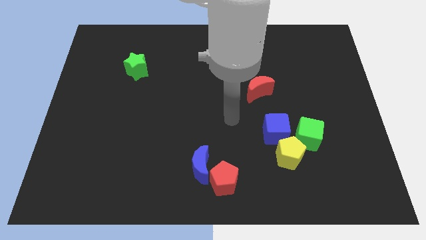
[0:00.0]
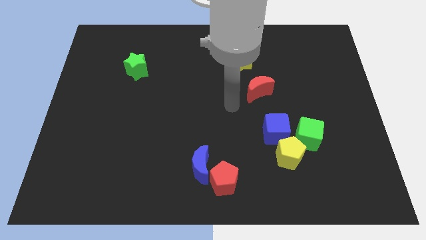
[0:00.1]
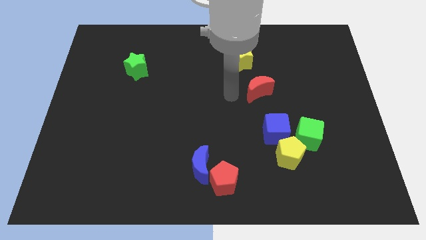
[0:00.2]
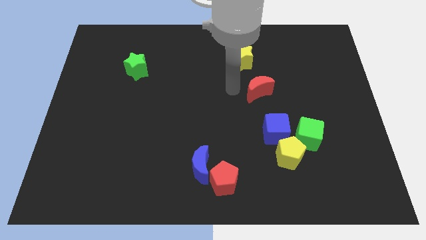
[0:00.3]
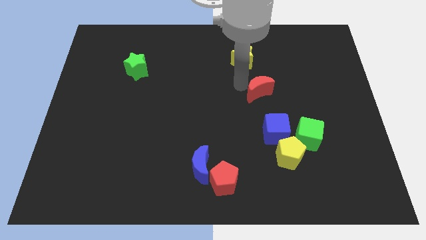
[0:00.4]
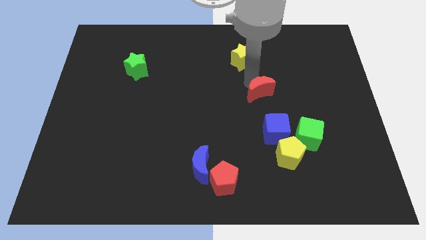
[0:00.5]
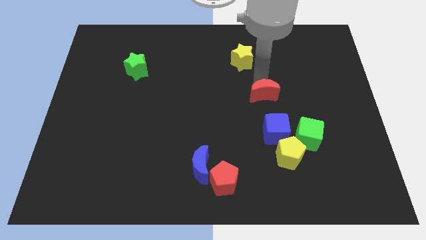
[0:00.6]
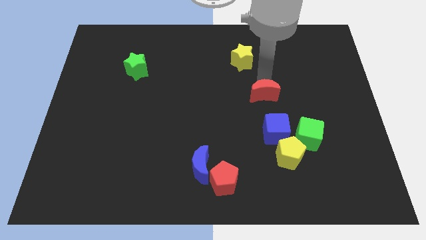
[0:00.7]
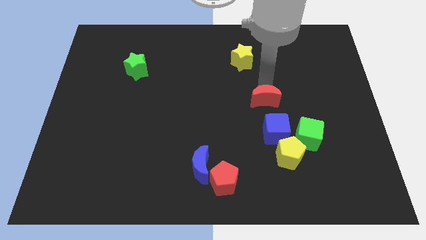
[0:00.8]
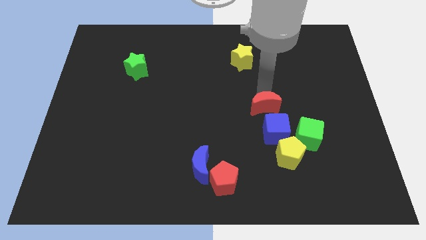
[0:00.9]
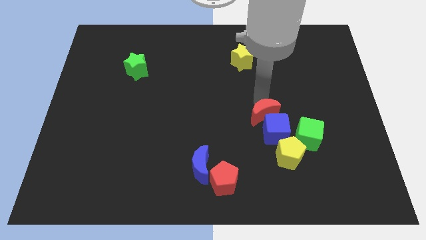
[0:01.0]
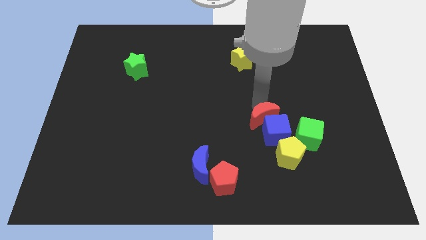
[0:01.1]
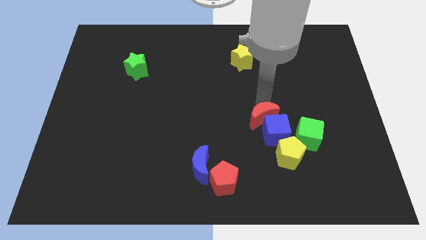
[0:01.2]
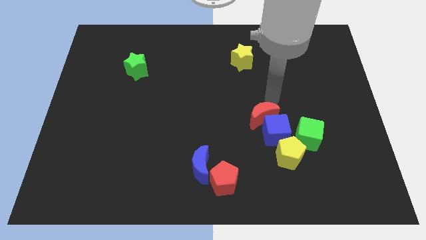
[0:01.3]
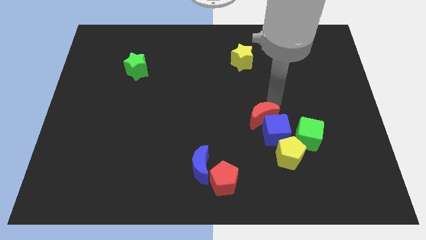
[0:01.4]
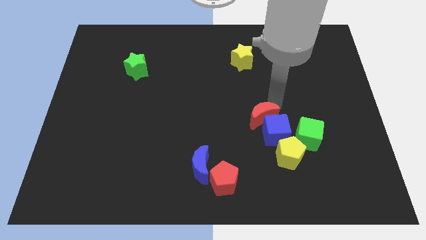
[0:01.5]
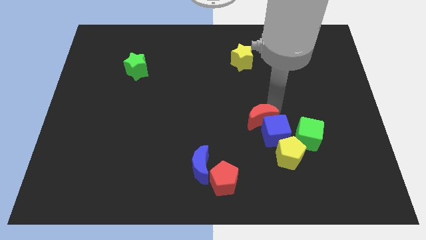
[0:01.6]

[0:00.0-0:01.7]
place the red crescent towards the blue cube

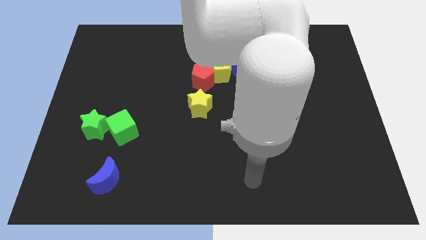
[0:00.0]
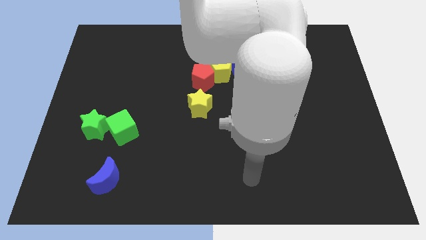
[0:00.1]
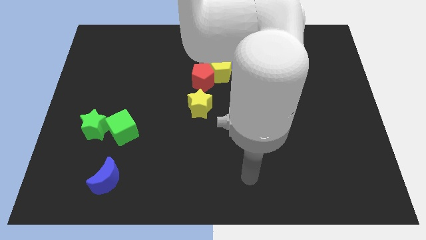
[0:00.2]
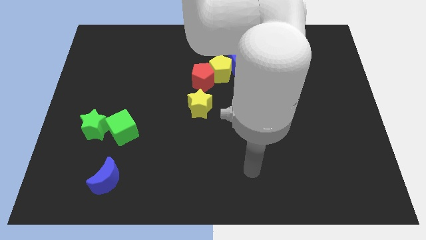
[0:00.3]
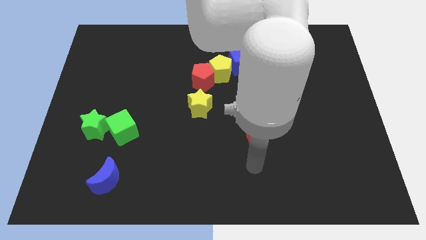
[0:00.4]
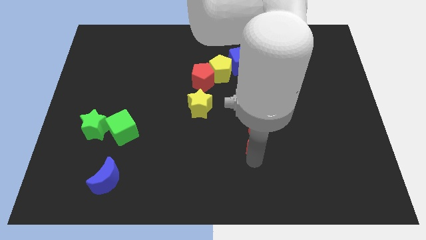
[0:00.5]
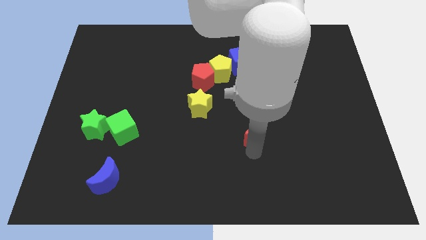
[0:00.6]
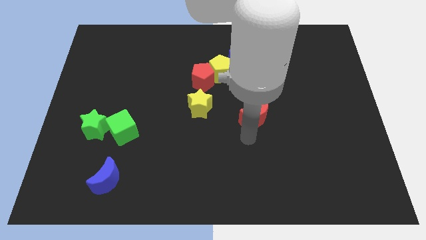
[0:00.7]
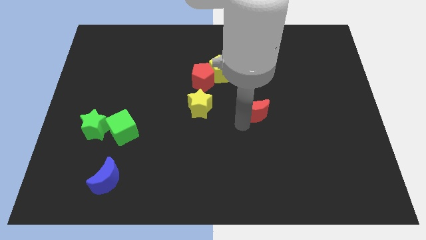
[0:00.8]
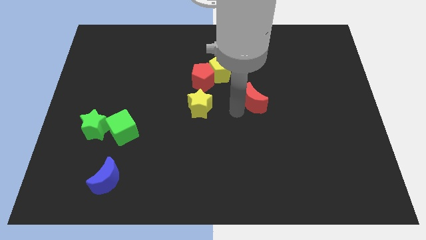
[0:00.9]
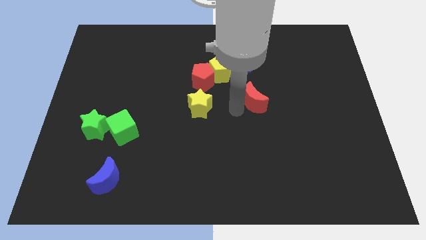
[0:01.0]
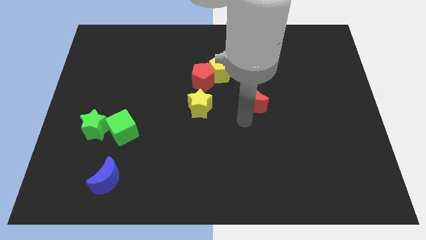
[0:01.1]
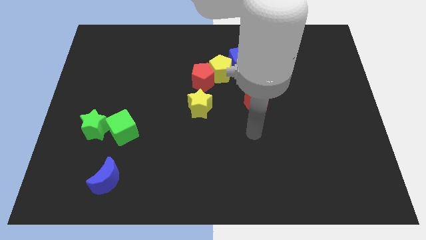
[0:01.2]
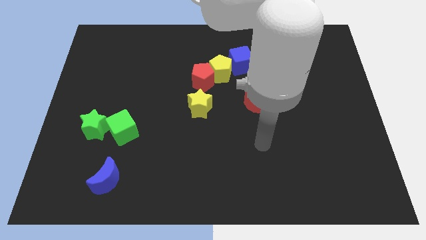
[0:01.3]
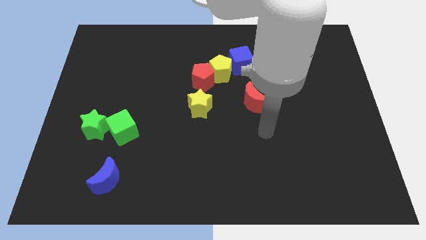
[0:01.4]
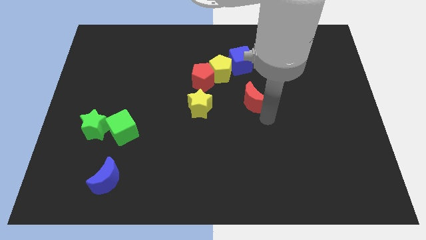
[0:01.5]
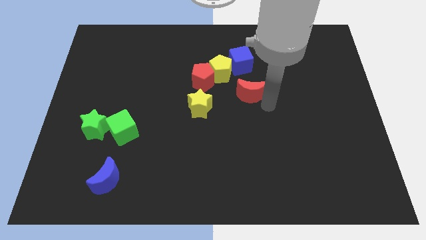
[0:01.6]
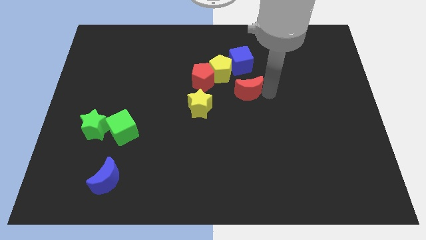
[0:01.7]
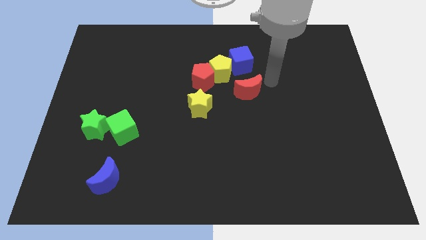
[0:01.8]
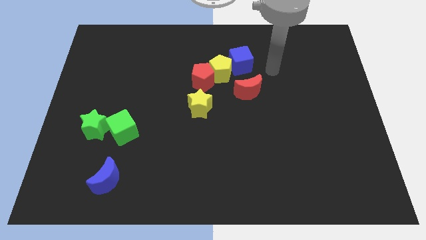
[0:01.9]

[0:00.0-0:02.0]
move the red crescent towards the blue cube

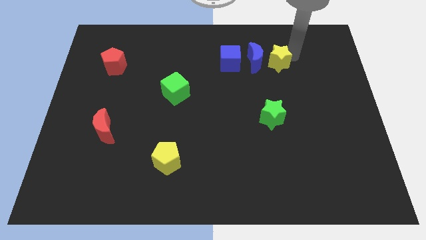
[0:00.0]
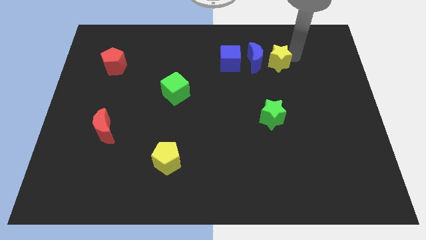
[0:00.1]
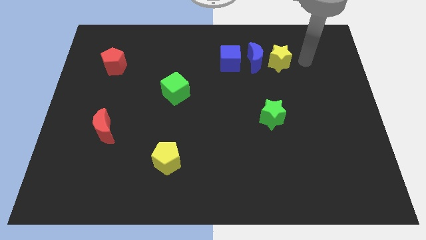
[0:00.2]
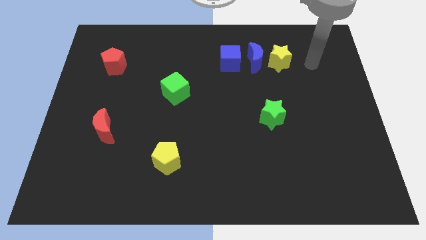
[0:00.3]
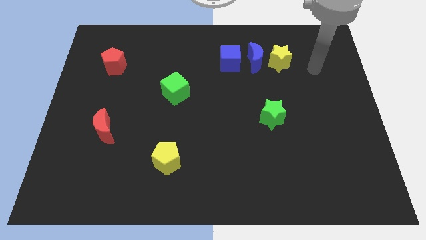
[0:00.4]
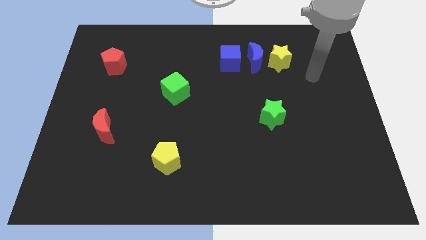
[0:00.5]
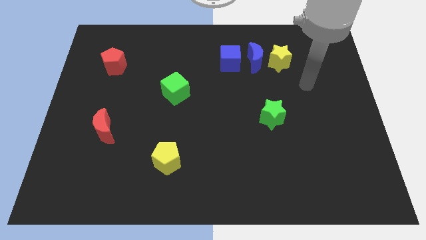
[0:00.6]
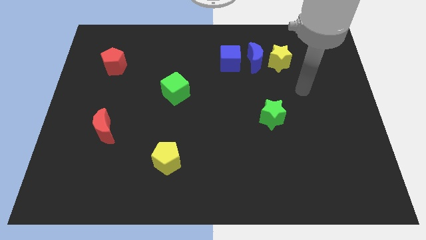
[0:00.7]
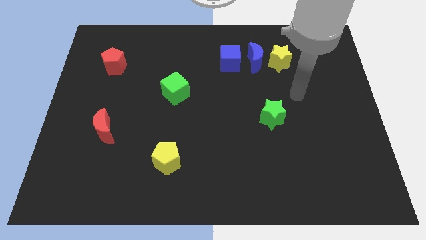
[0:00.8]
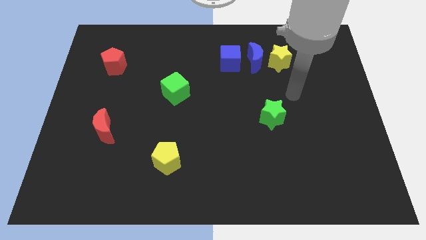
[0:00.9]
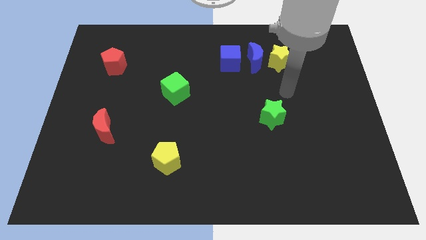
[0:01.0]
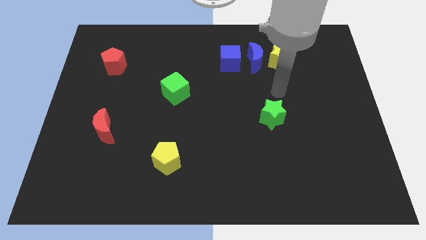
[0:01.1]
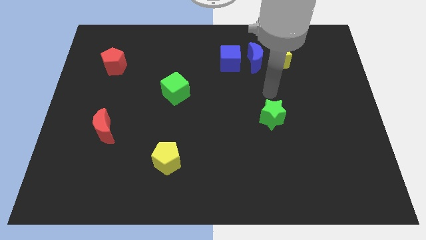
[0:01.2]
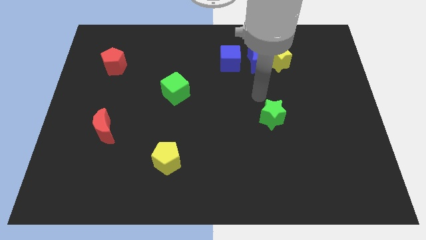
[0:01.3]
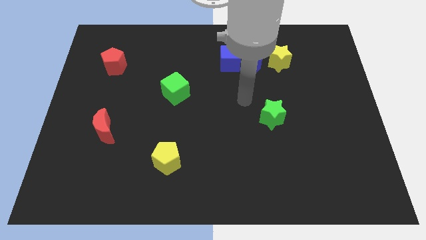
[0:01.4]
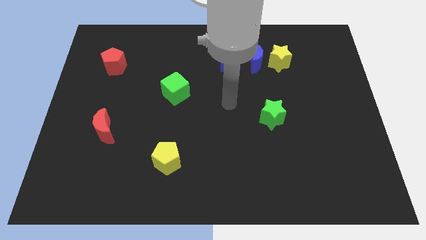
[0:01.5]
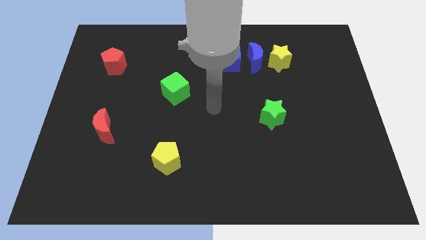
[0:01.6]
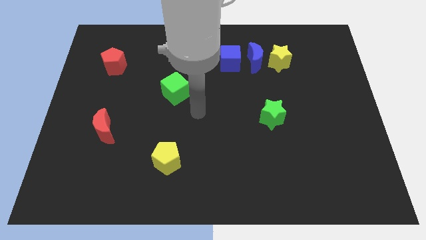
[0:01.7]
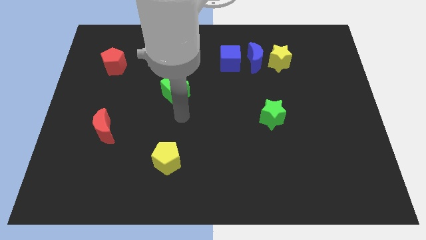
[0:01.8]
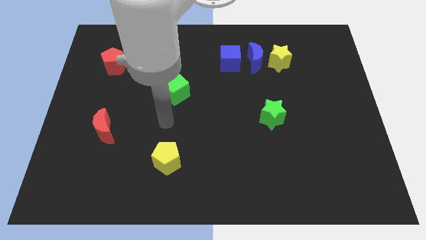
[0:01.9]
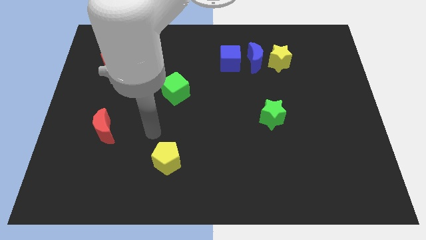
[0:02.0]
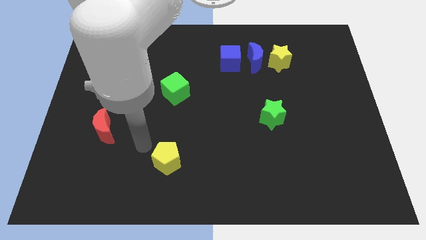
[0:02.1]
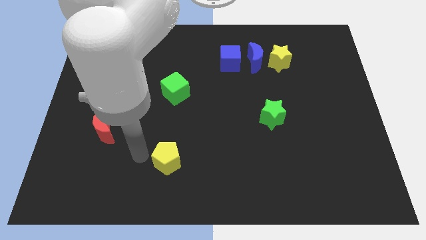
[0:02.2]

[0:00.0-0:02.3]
place the arm to the left of the yellow pentagon

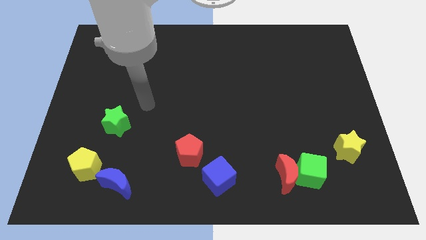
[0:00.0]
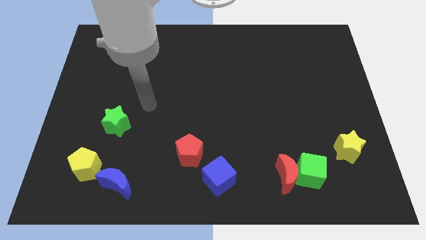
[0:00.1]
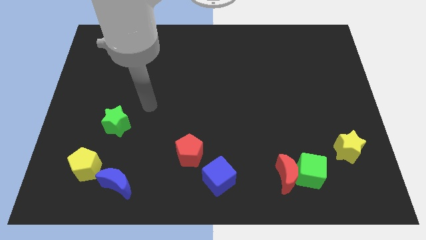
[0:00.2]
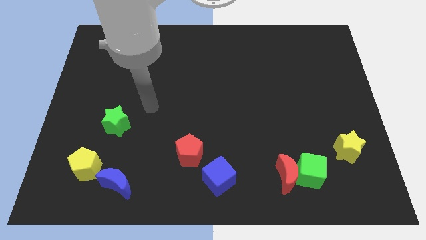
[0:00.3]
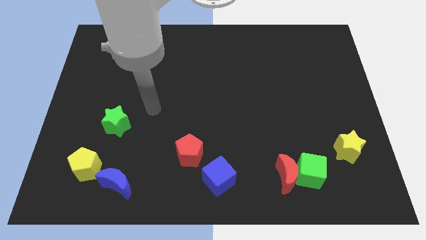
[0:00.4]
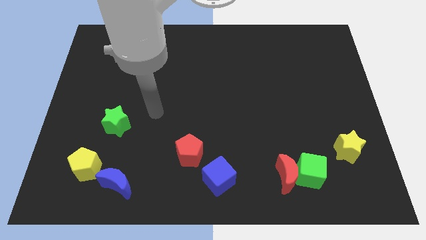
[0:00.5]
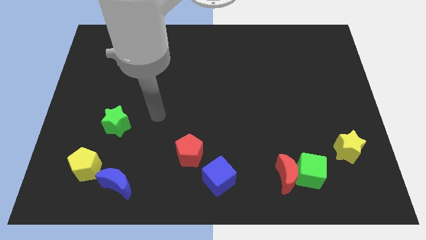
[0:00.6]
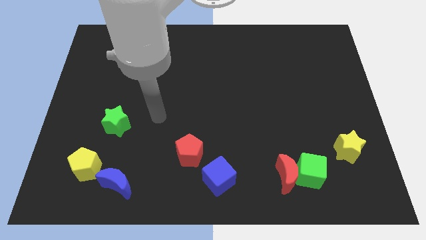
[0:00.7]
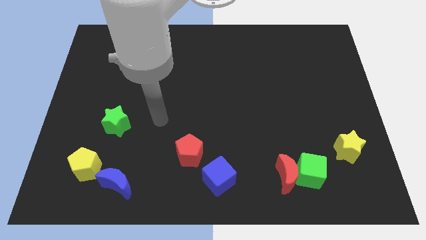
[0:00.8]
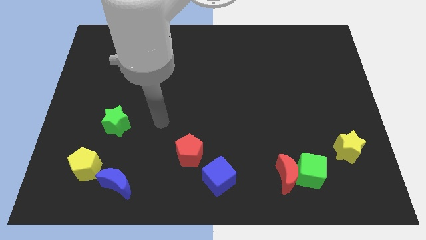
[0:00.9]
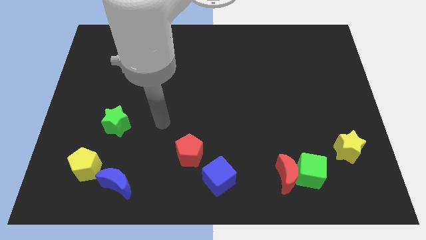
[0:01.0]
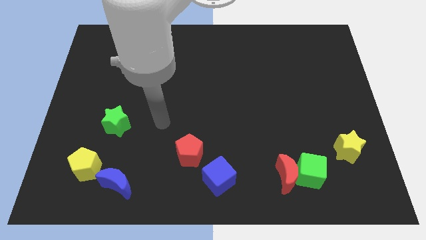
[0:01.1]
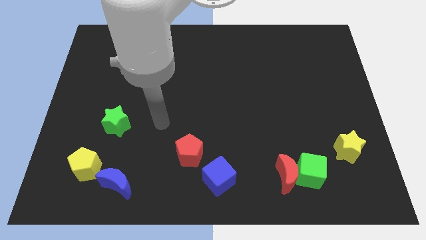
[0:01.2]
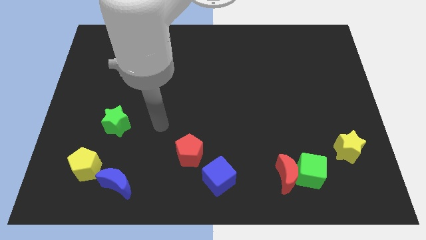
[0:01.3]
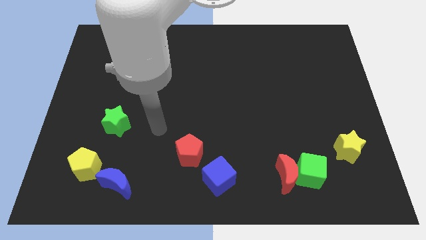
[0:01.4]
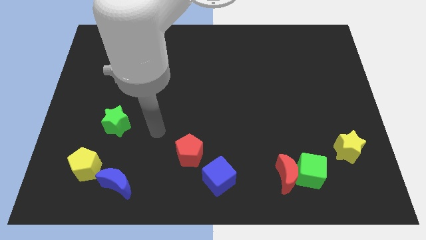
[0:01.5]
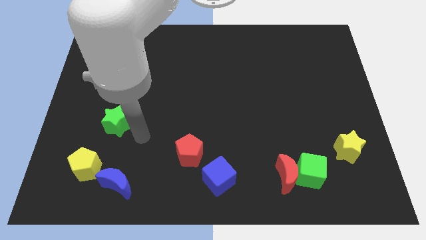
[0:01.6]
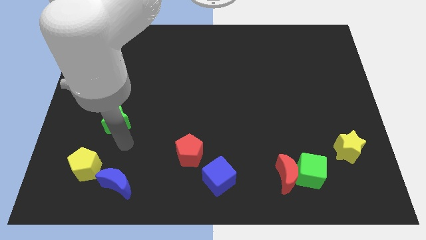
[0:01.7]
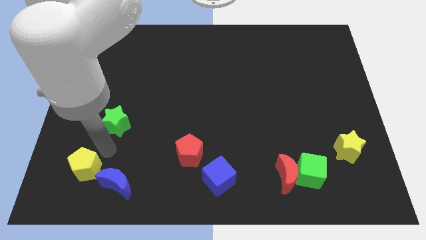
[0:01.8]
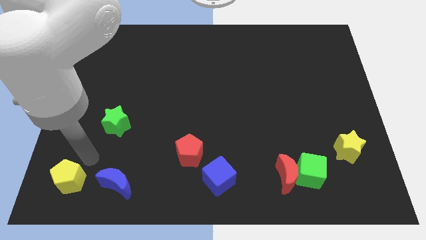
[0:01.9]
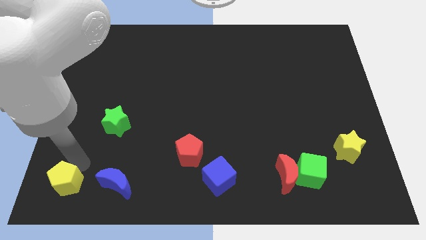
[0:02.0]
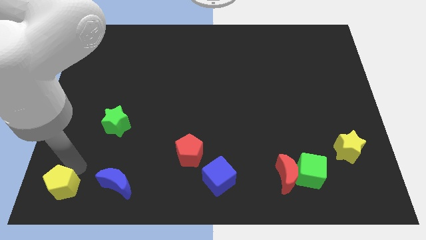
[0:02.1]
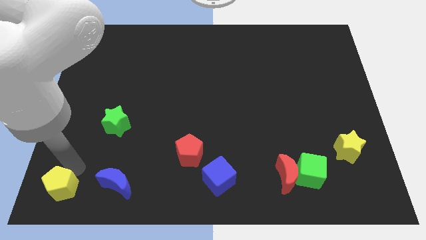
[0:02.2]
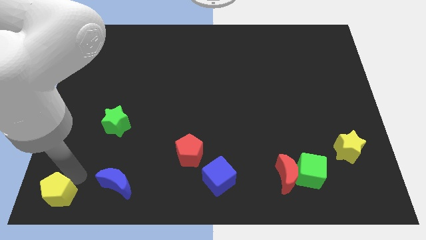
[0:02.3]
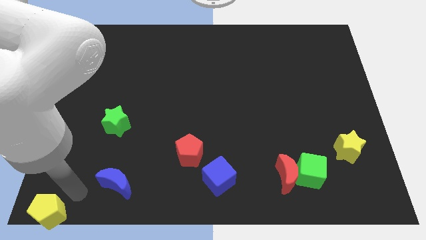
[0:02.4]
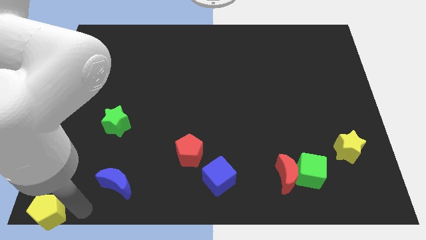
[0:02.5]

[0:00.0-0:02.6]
push the yellow pentagon towards the bottom left corner of the board

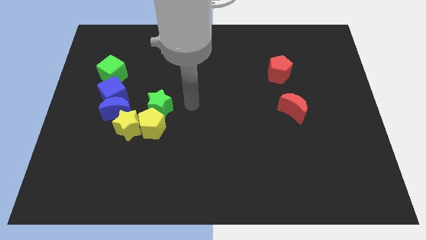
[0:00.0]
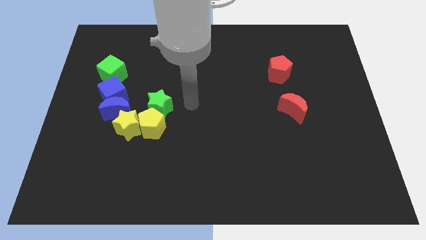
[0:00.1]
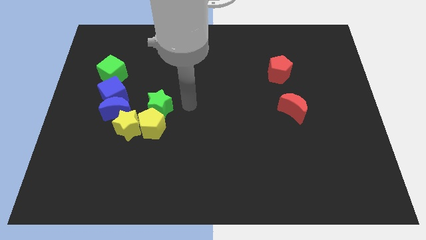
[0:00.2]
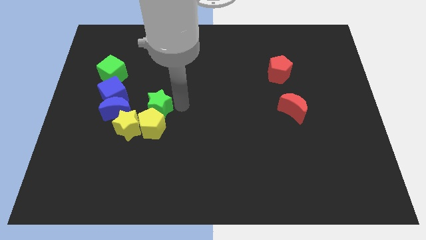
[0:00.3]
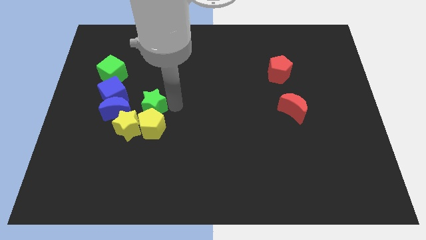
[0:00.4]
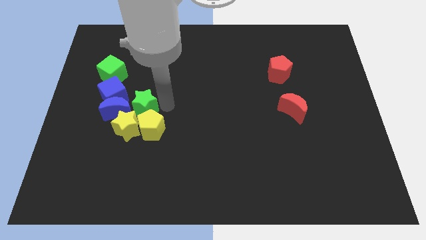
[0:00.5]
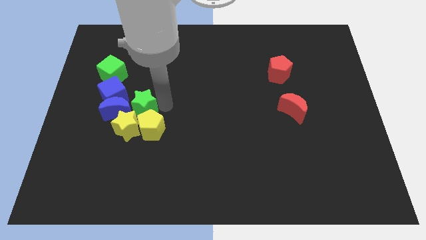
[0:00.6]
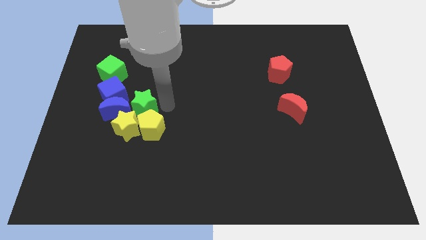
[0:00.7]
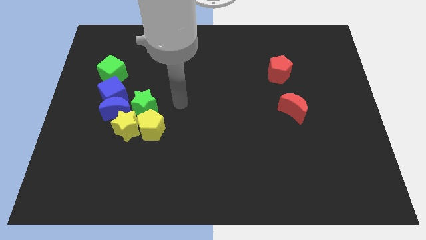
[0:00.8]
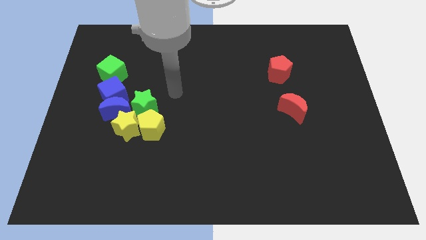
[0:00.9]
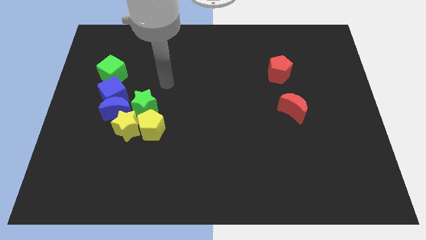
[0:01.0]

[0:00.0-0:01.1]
move the green star into all the blocks
